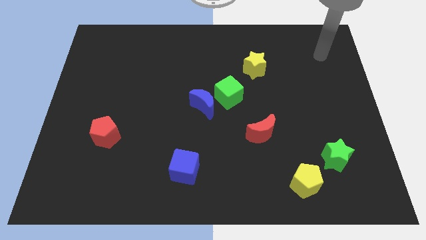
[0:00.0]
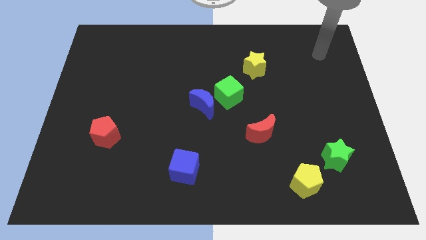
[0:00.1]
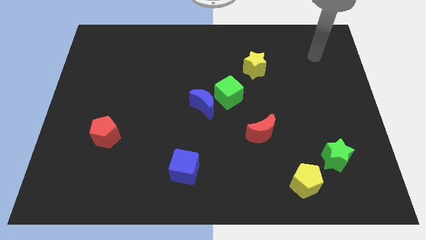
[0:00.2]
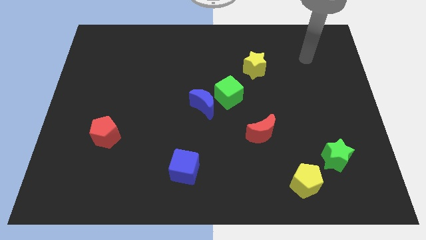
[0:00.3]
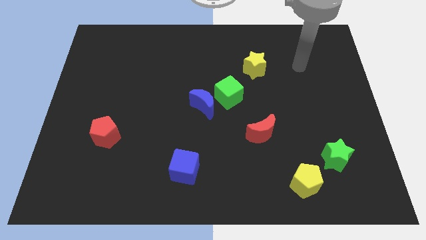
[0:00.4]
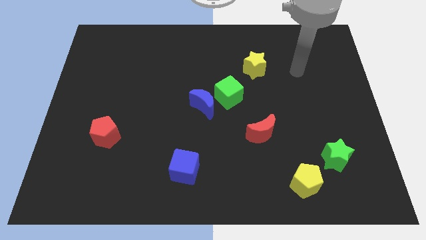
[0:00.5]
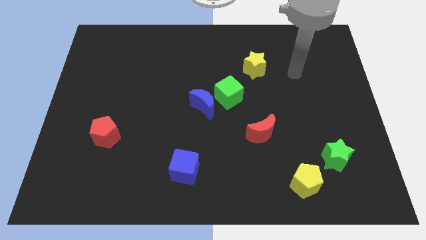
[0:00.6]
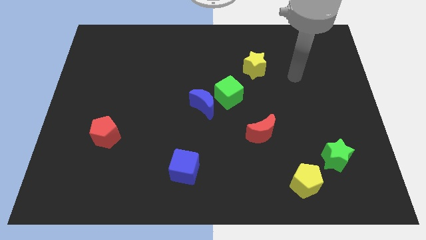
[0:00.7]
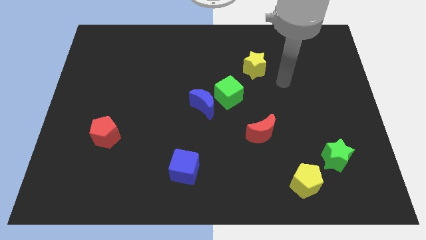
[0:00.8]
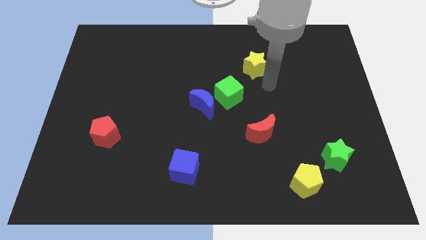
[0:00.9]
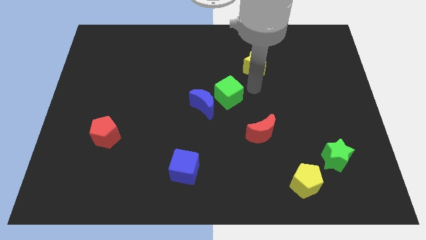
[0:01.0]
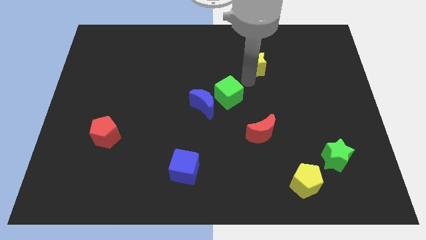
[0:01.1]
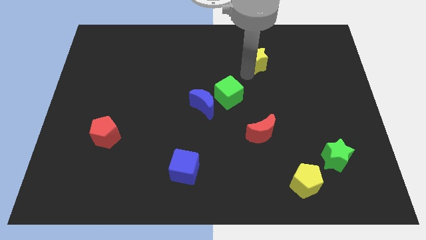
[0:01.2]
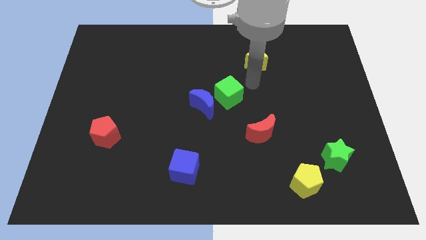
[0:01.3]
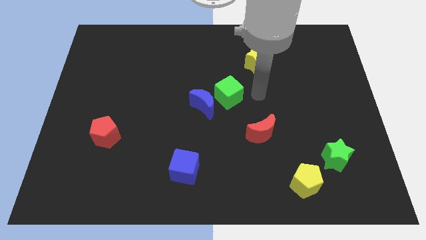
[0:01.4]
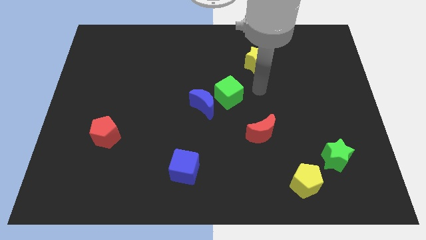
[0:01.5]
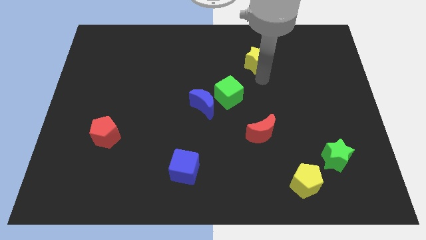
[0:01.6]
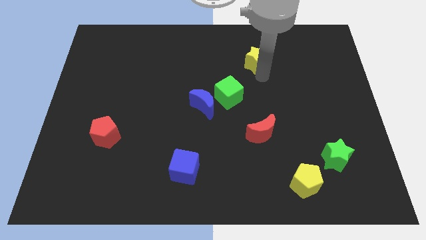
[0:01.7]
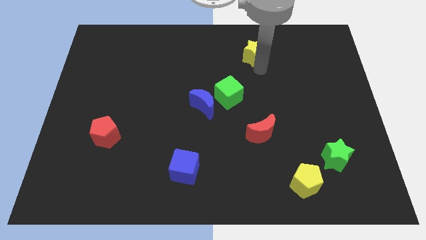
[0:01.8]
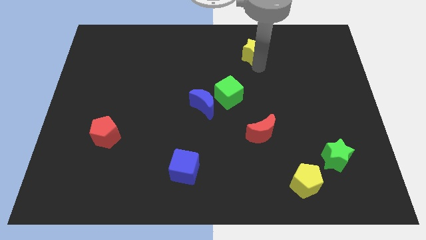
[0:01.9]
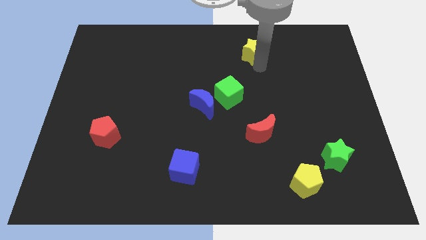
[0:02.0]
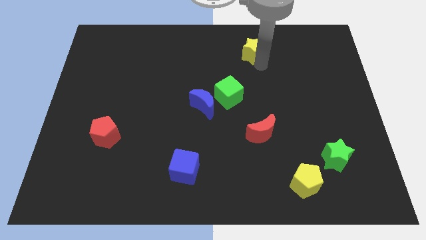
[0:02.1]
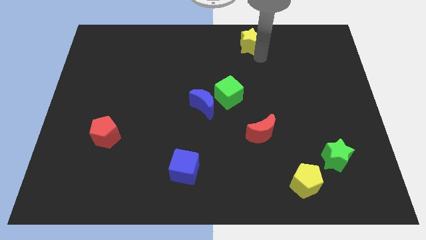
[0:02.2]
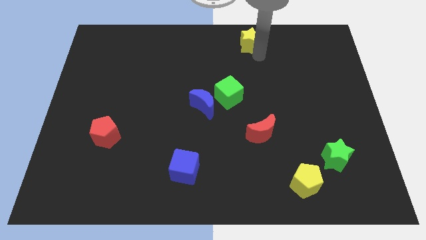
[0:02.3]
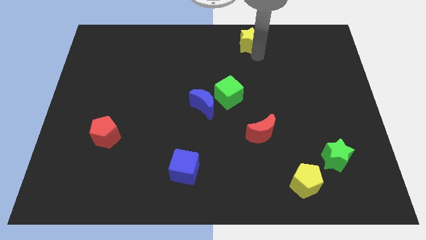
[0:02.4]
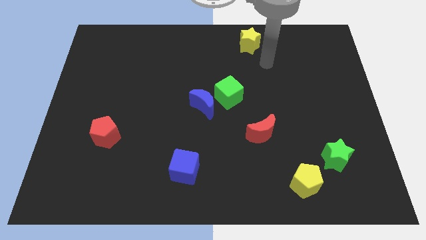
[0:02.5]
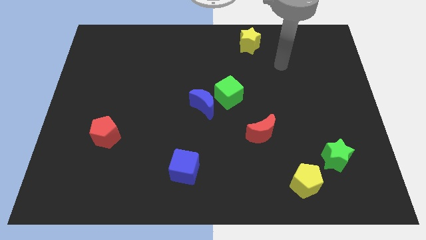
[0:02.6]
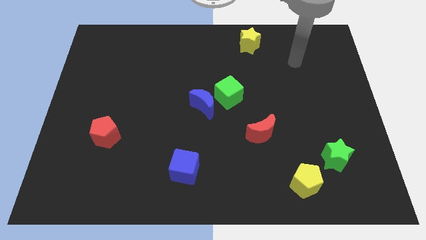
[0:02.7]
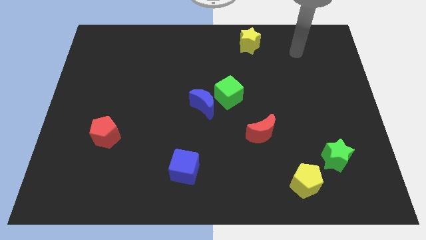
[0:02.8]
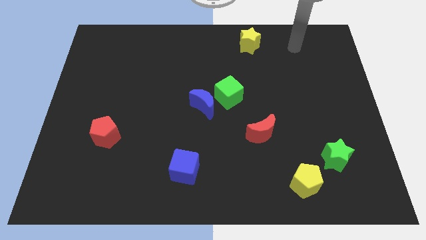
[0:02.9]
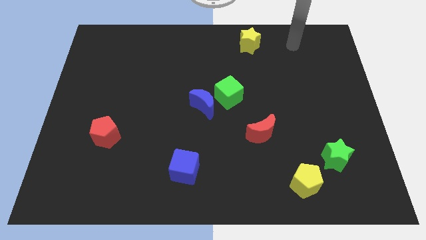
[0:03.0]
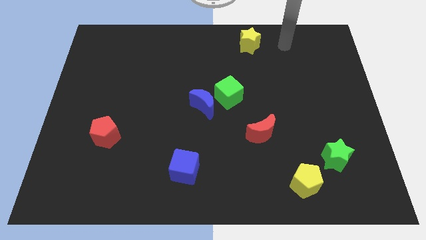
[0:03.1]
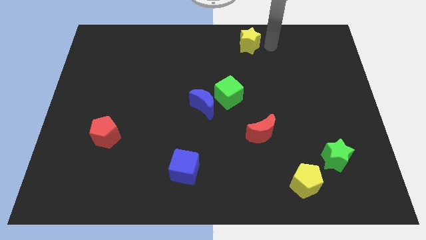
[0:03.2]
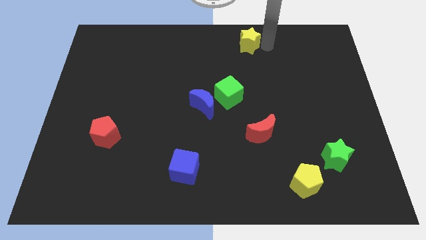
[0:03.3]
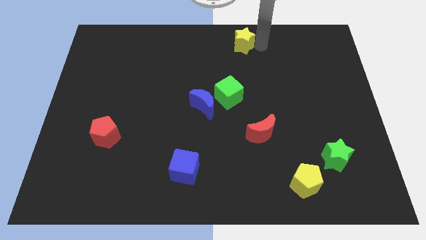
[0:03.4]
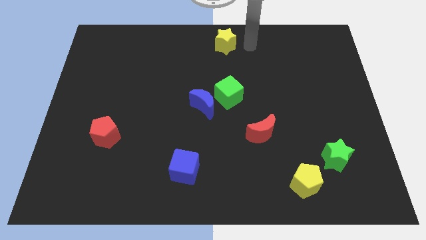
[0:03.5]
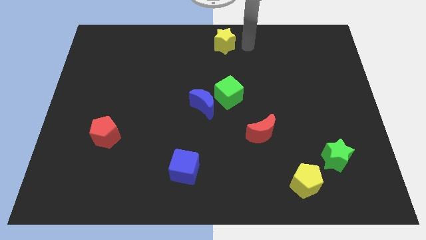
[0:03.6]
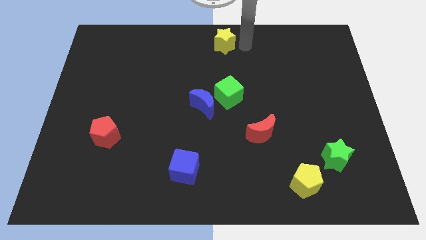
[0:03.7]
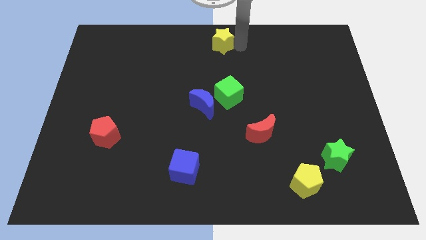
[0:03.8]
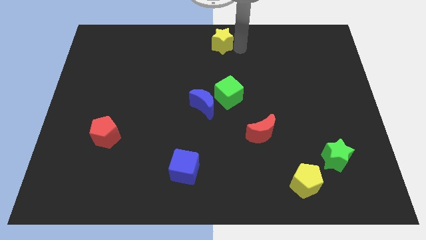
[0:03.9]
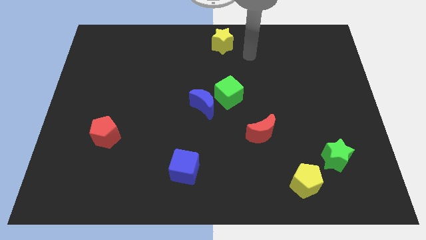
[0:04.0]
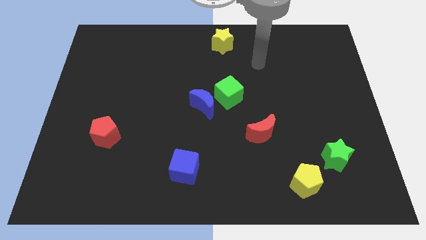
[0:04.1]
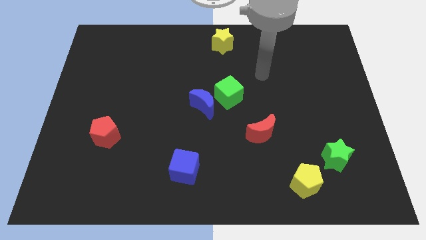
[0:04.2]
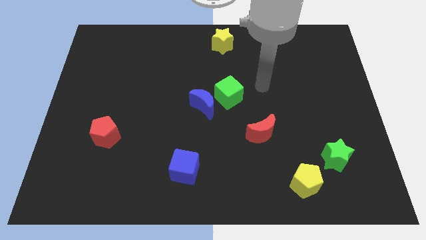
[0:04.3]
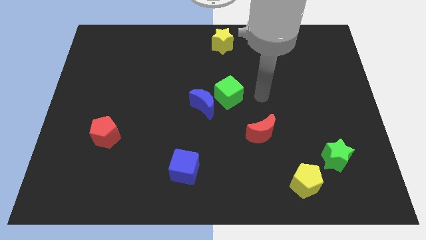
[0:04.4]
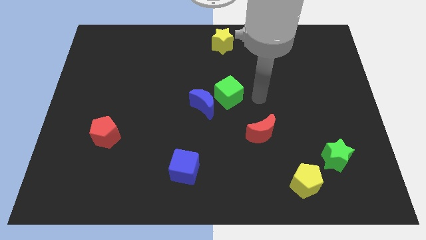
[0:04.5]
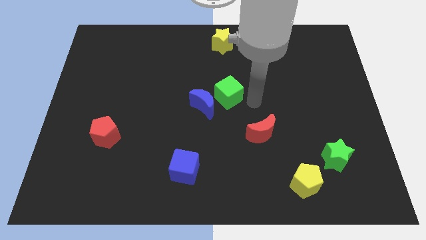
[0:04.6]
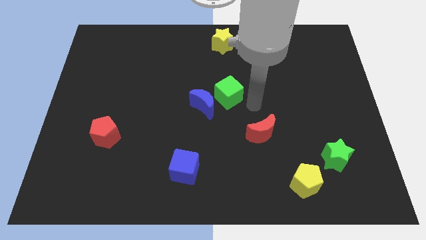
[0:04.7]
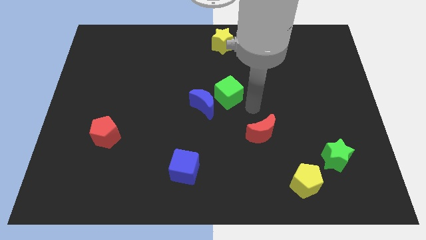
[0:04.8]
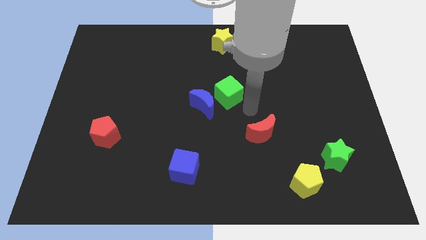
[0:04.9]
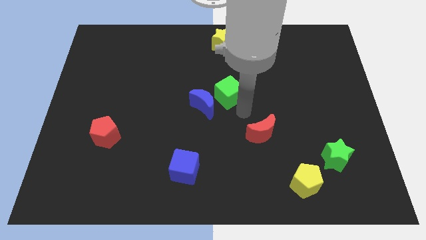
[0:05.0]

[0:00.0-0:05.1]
move the green star to the top center of the board

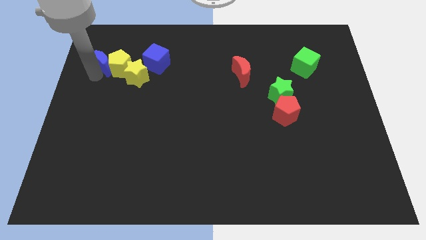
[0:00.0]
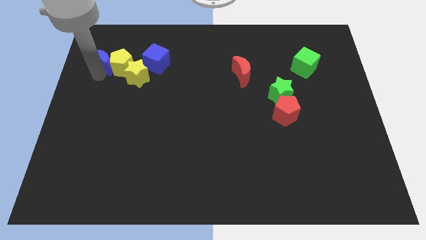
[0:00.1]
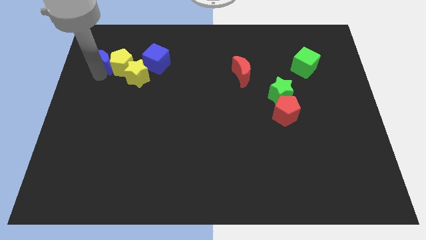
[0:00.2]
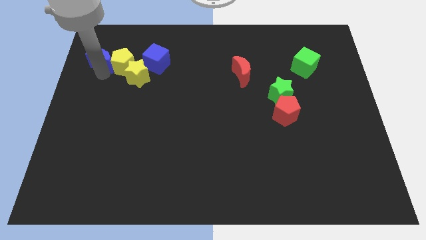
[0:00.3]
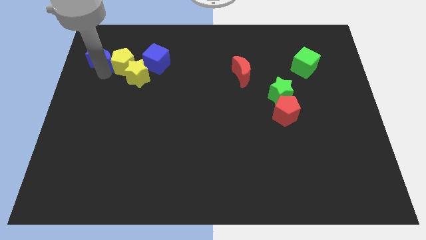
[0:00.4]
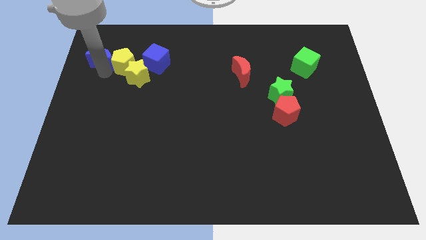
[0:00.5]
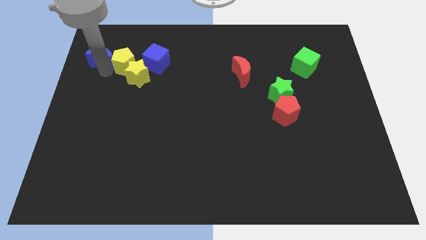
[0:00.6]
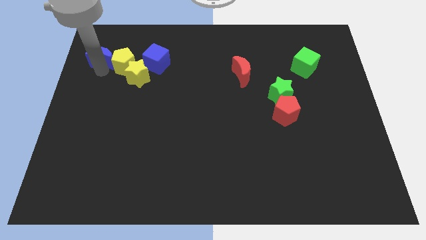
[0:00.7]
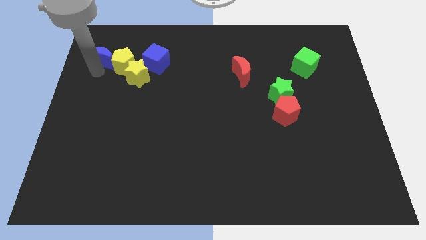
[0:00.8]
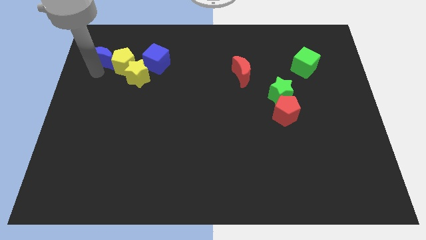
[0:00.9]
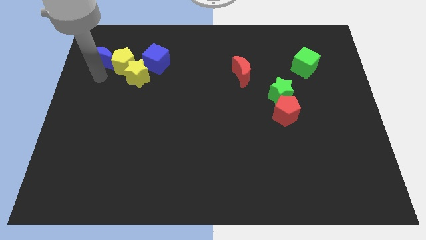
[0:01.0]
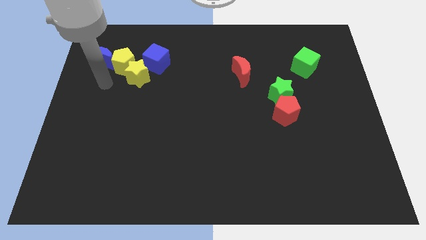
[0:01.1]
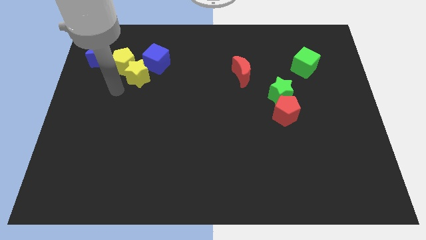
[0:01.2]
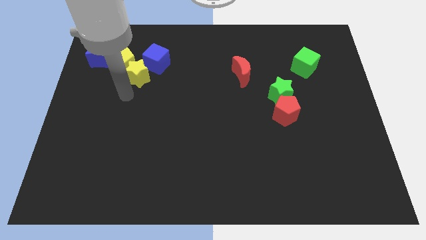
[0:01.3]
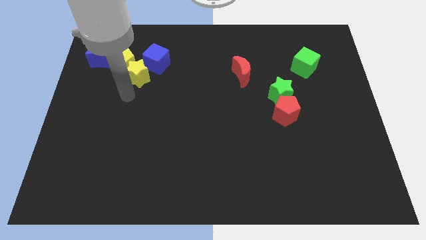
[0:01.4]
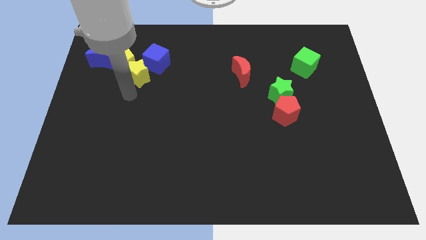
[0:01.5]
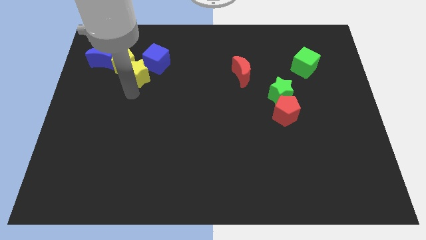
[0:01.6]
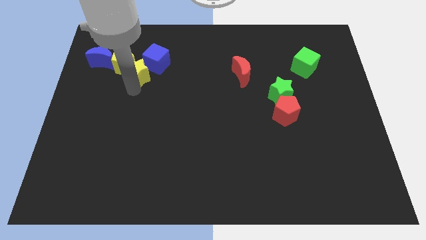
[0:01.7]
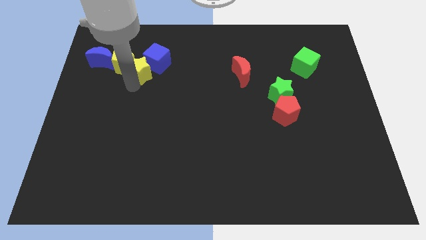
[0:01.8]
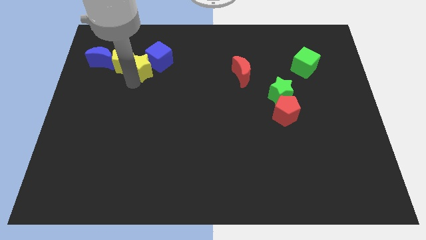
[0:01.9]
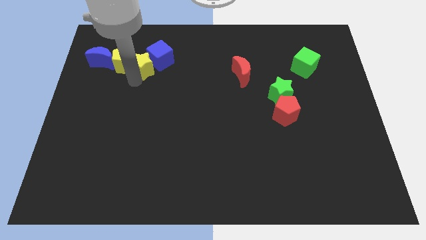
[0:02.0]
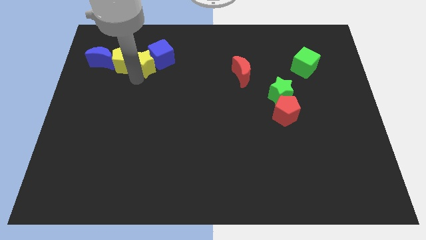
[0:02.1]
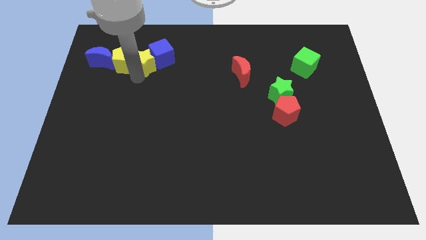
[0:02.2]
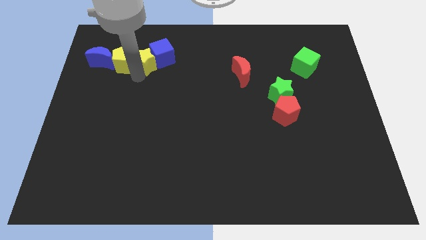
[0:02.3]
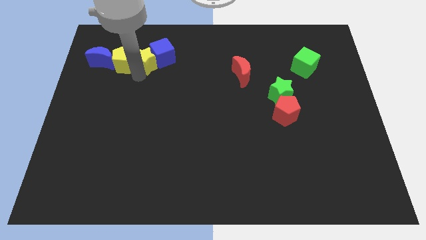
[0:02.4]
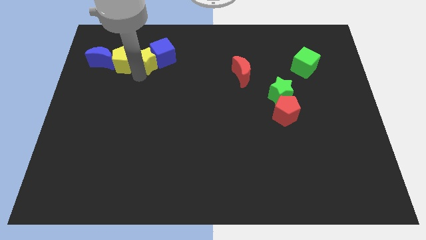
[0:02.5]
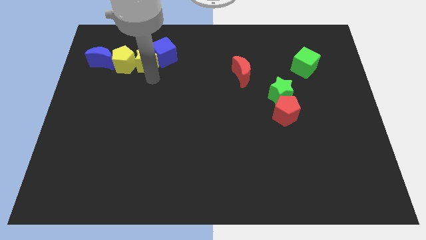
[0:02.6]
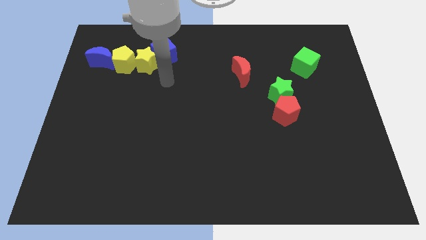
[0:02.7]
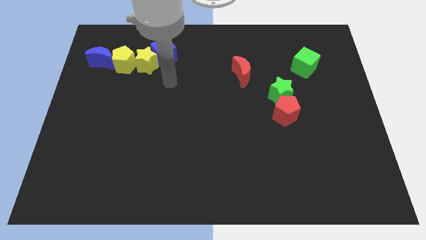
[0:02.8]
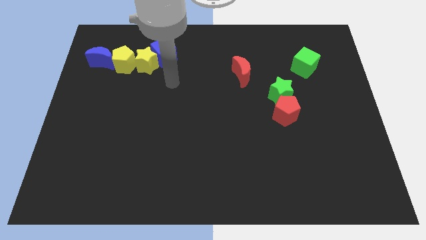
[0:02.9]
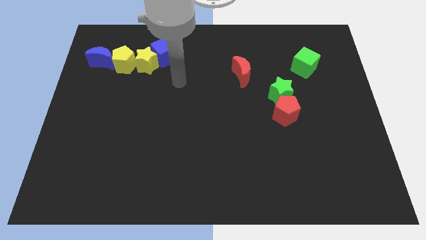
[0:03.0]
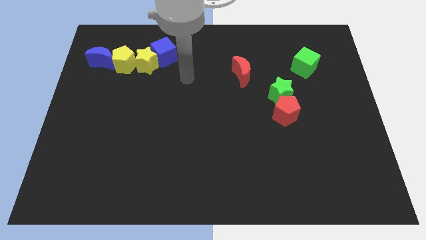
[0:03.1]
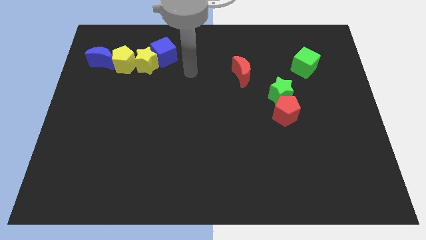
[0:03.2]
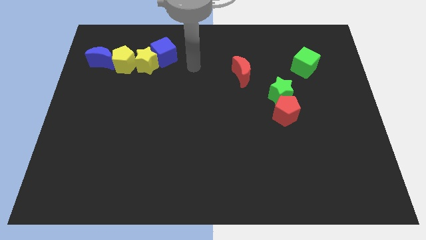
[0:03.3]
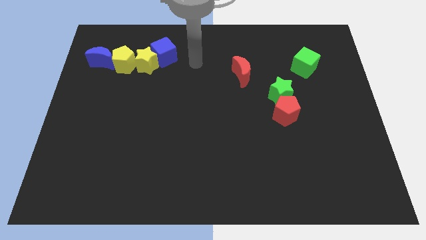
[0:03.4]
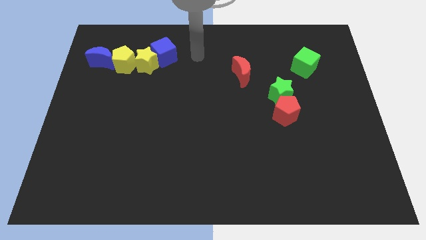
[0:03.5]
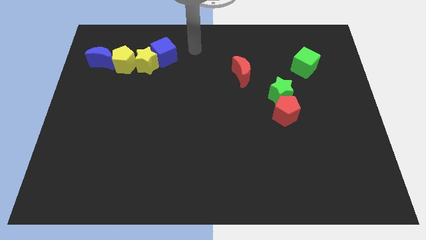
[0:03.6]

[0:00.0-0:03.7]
push the yellow star between yellow pentagon and blue cube

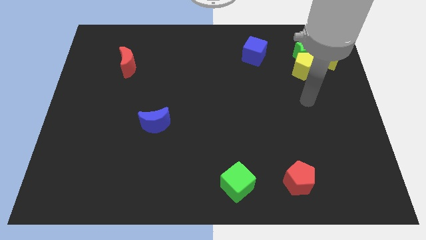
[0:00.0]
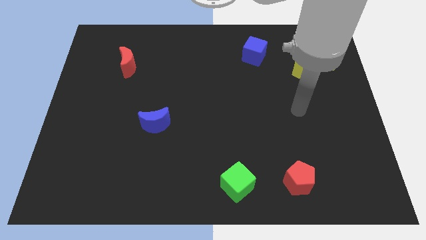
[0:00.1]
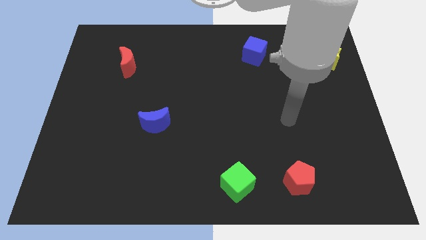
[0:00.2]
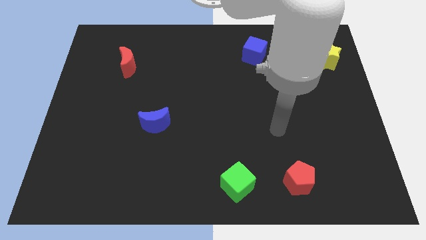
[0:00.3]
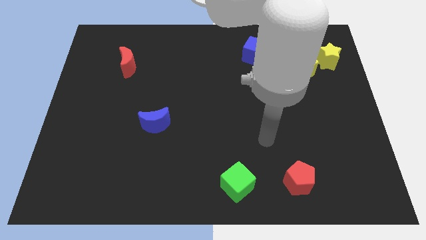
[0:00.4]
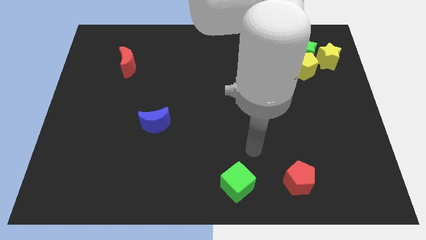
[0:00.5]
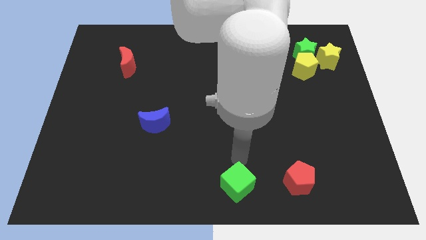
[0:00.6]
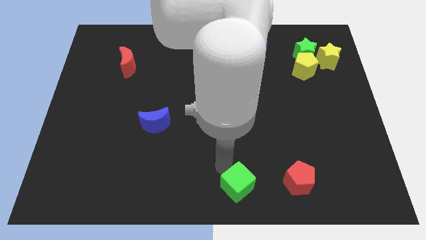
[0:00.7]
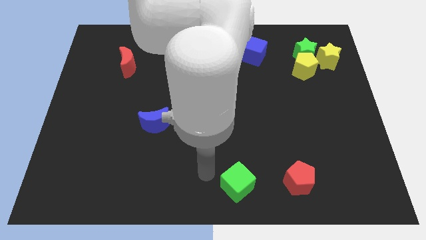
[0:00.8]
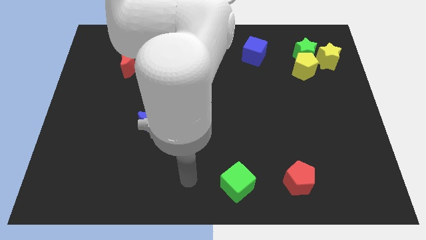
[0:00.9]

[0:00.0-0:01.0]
move your arm towards the green cube
